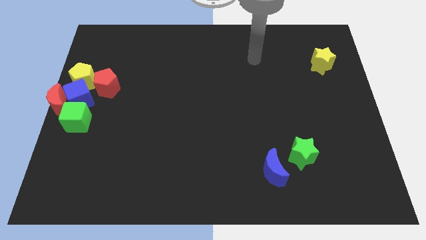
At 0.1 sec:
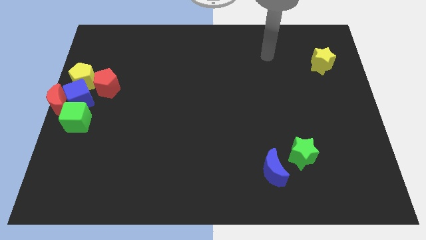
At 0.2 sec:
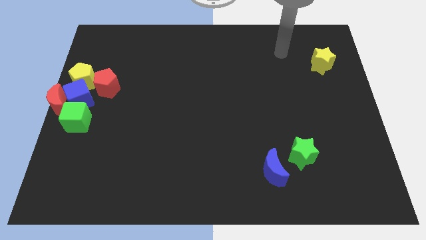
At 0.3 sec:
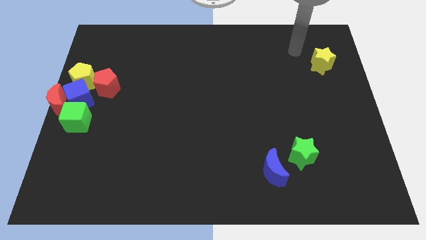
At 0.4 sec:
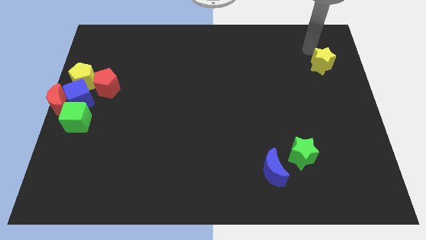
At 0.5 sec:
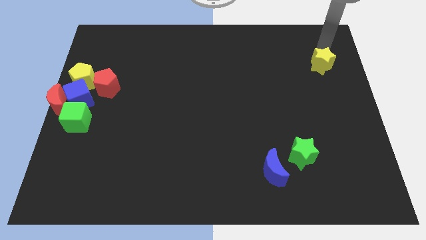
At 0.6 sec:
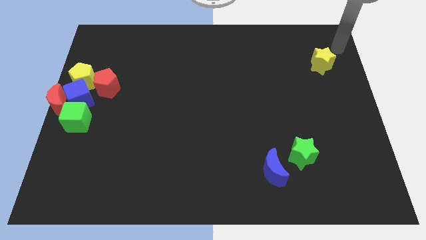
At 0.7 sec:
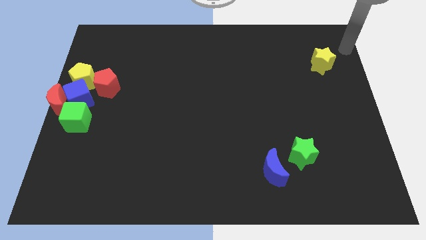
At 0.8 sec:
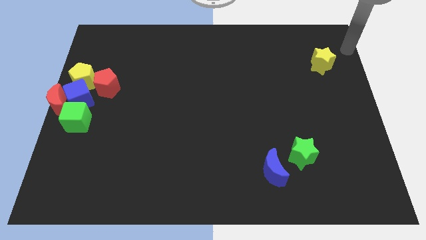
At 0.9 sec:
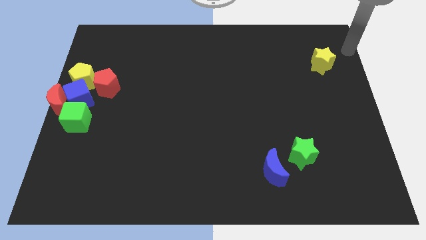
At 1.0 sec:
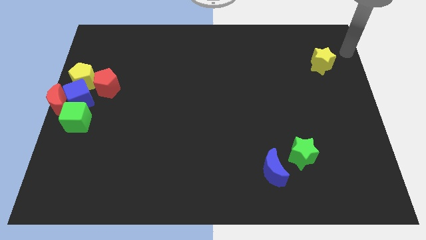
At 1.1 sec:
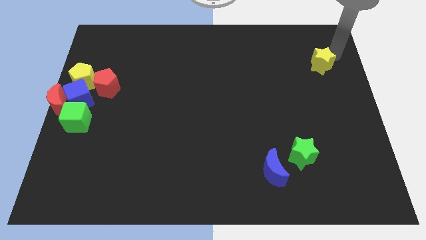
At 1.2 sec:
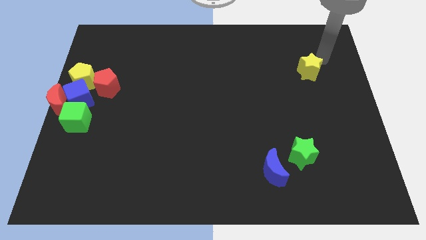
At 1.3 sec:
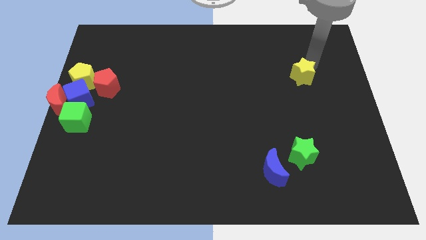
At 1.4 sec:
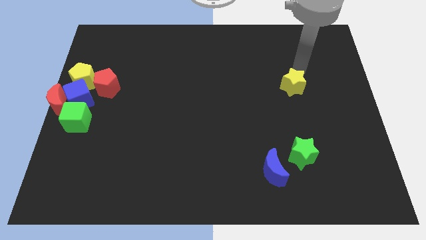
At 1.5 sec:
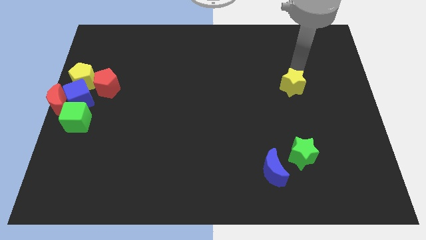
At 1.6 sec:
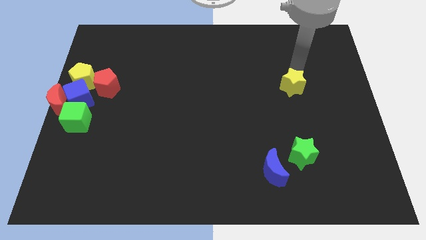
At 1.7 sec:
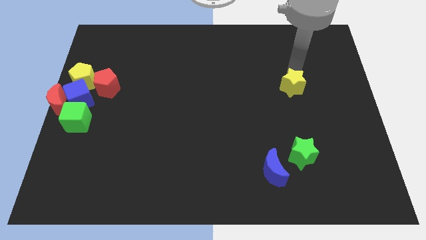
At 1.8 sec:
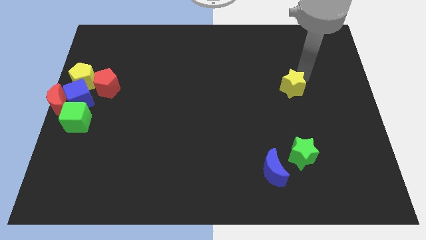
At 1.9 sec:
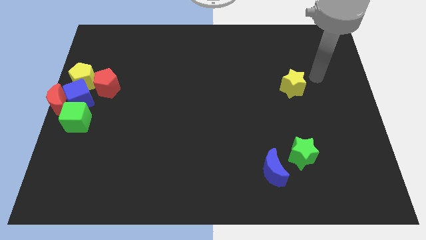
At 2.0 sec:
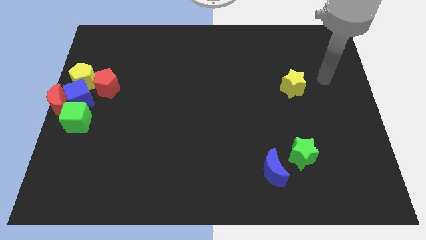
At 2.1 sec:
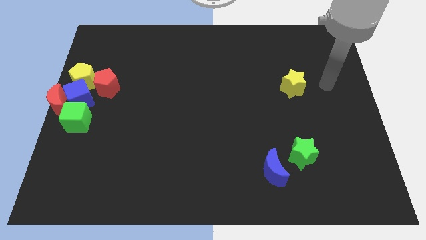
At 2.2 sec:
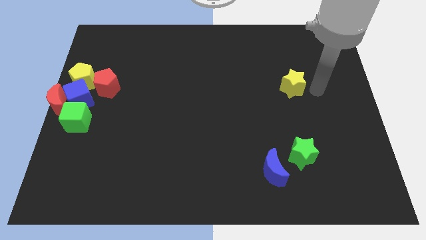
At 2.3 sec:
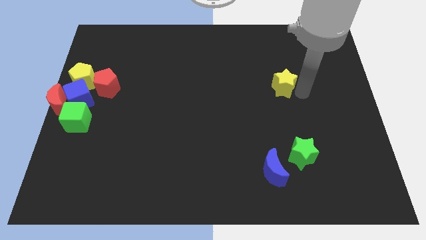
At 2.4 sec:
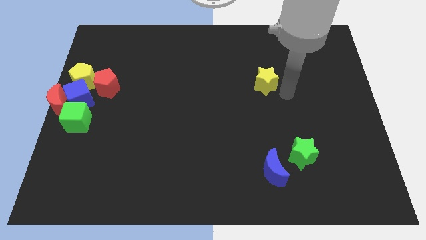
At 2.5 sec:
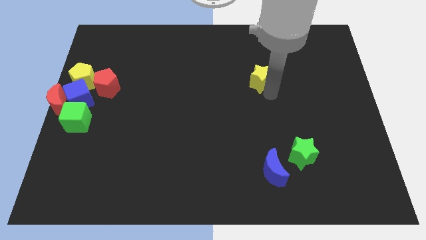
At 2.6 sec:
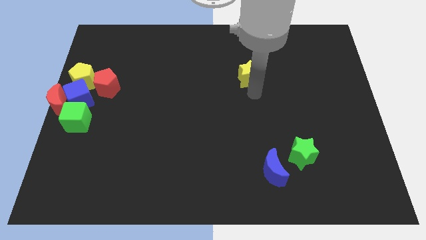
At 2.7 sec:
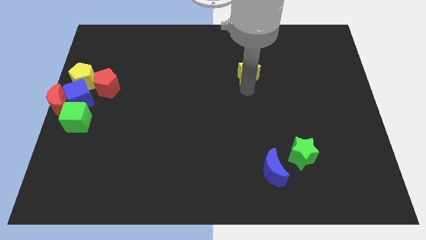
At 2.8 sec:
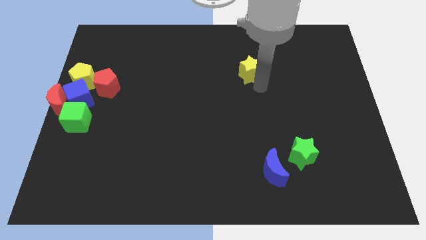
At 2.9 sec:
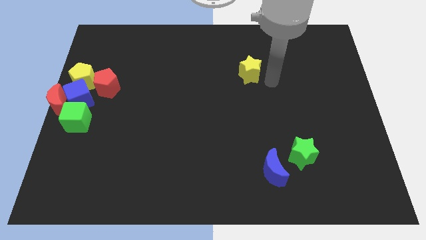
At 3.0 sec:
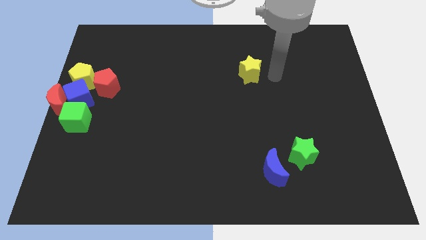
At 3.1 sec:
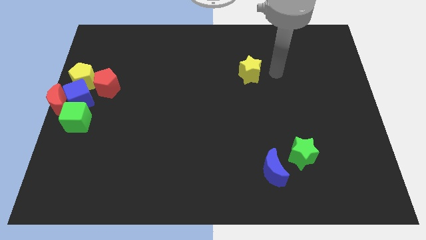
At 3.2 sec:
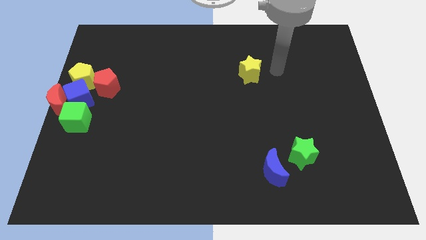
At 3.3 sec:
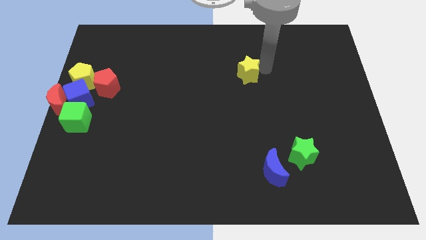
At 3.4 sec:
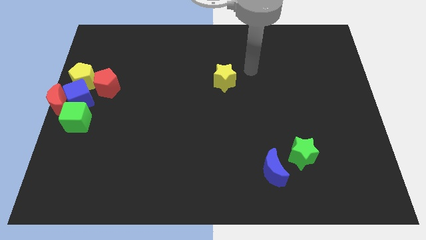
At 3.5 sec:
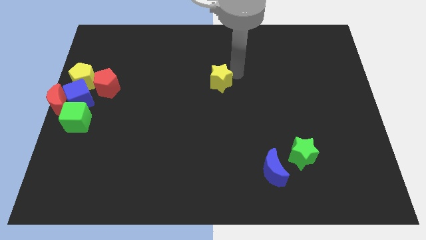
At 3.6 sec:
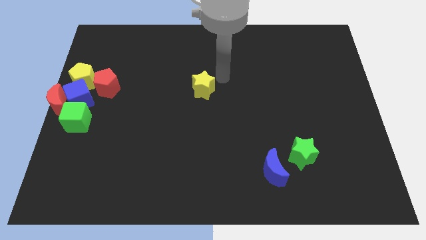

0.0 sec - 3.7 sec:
put the yellow star at the center of the board

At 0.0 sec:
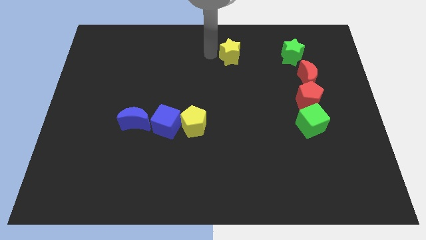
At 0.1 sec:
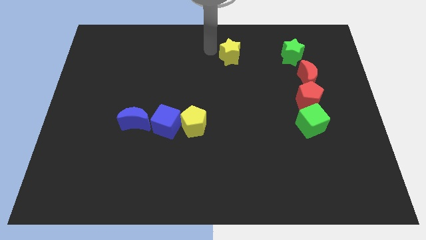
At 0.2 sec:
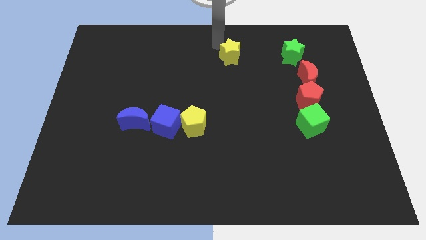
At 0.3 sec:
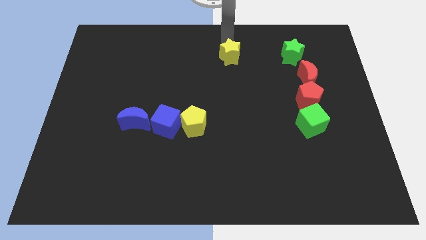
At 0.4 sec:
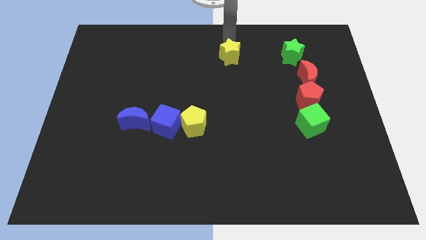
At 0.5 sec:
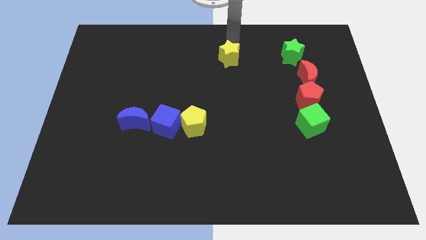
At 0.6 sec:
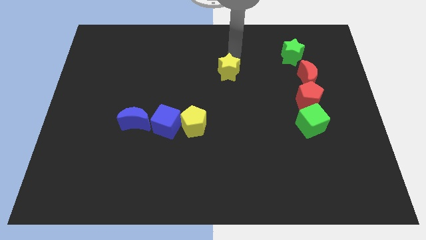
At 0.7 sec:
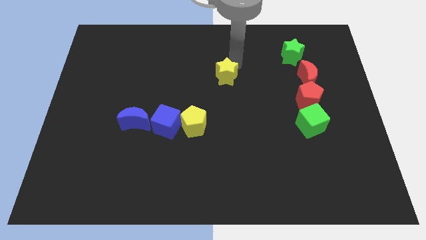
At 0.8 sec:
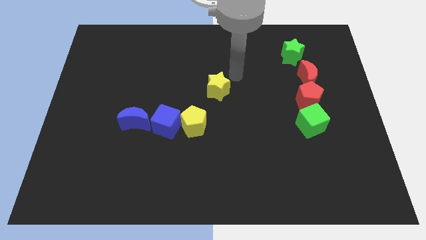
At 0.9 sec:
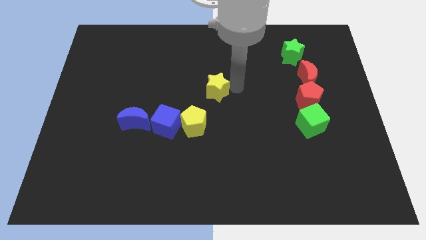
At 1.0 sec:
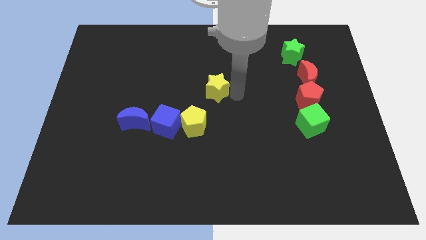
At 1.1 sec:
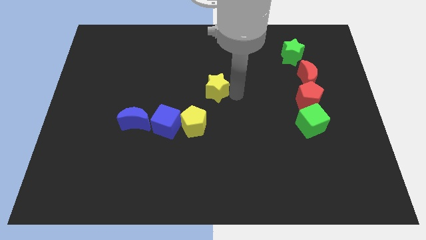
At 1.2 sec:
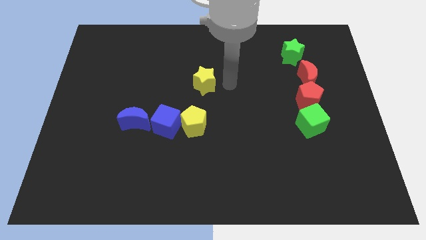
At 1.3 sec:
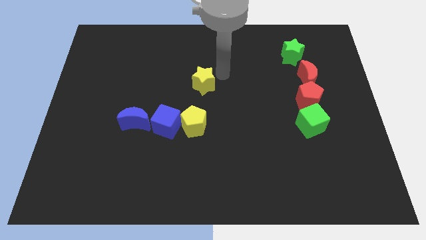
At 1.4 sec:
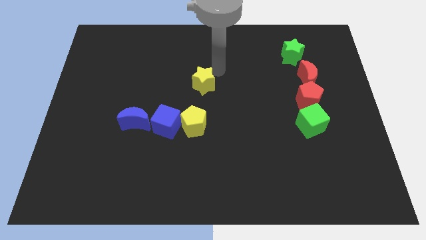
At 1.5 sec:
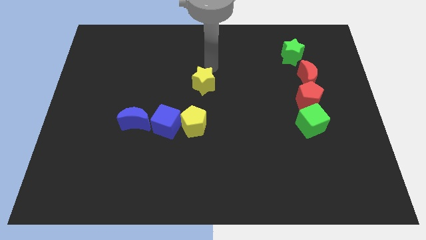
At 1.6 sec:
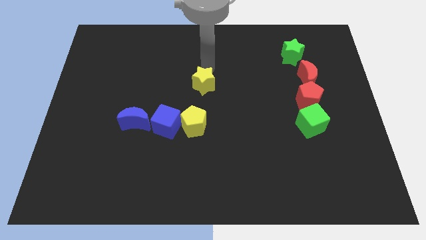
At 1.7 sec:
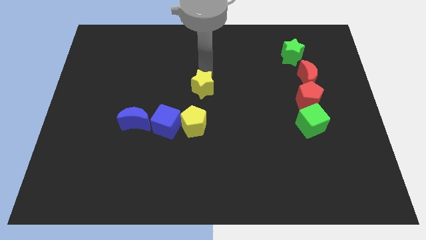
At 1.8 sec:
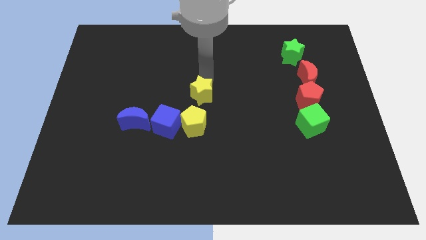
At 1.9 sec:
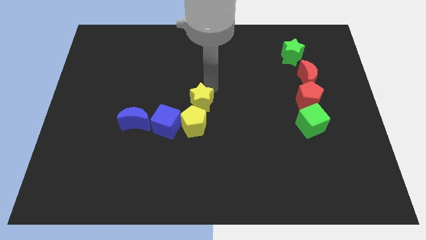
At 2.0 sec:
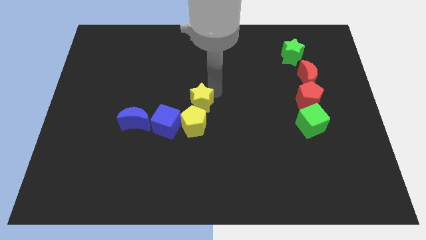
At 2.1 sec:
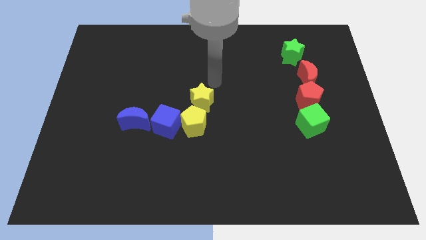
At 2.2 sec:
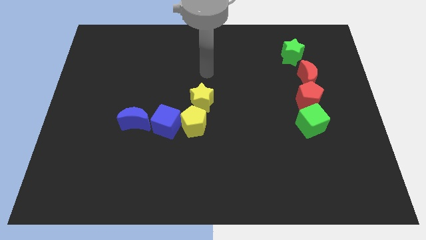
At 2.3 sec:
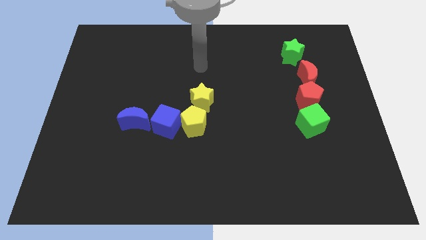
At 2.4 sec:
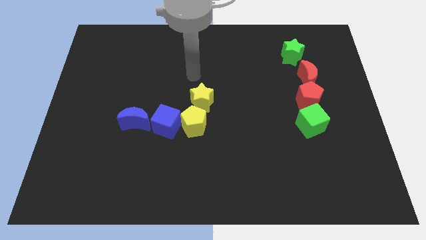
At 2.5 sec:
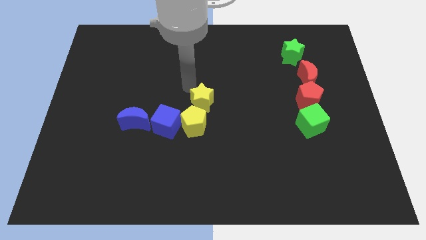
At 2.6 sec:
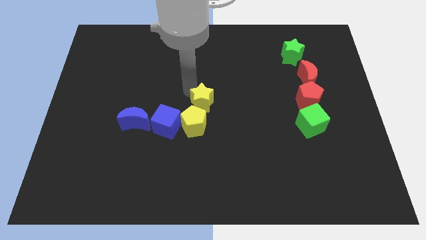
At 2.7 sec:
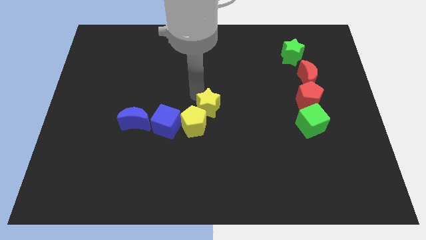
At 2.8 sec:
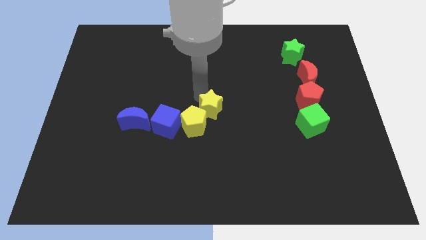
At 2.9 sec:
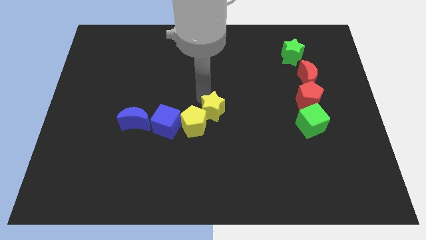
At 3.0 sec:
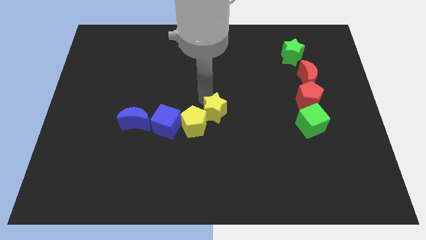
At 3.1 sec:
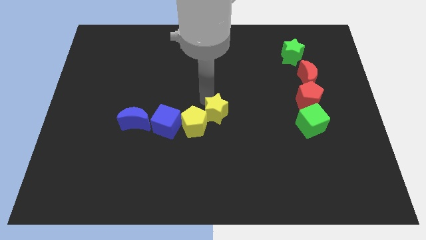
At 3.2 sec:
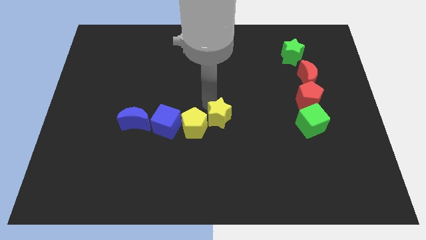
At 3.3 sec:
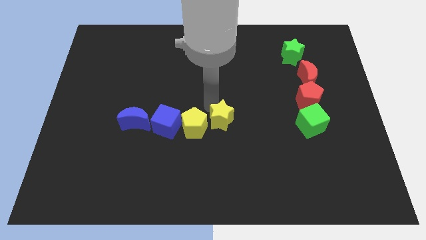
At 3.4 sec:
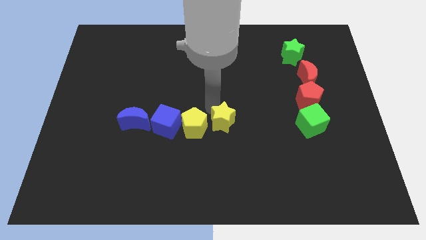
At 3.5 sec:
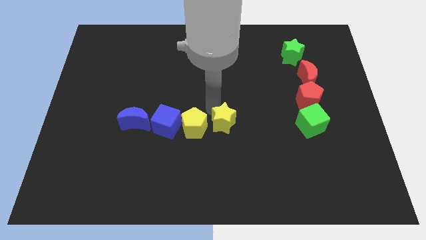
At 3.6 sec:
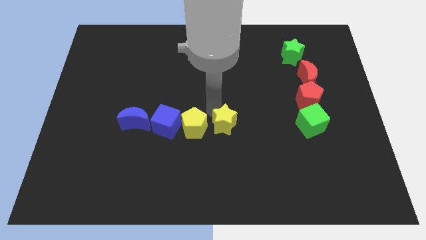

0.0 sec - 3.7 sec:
push the yellow star downward

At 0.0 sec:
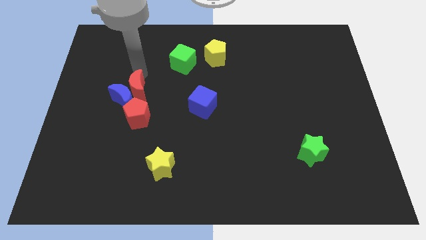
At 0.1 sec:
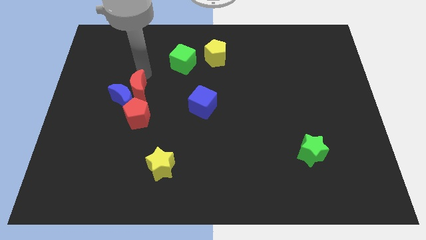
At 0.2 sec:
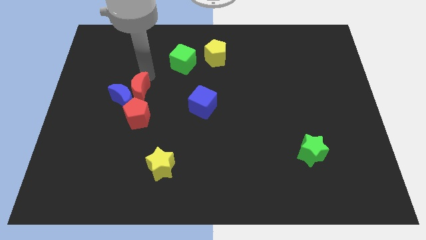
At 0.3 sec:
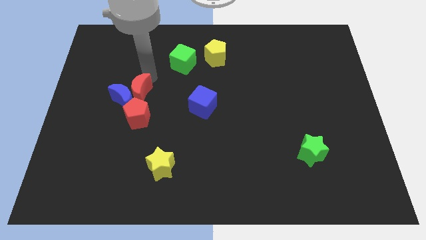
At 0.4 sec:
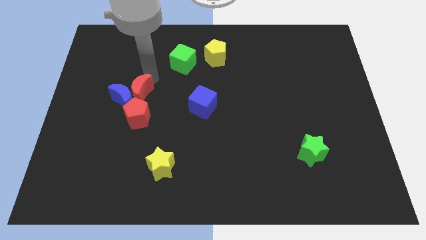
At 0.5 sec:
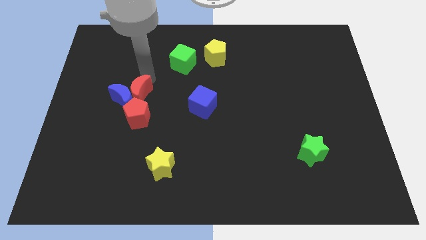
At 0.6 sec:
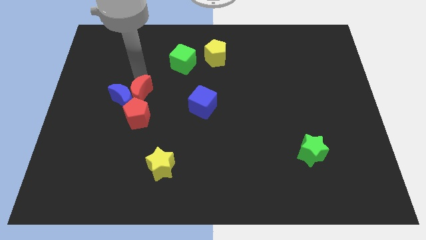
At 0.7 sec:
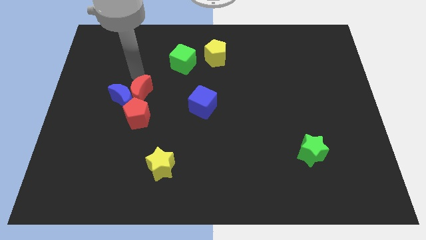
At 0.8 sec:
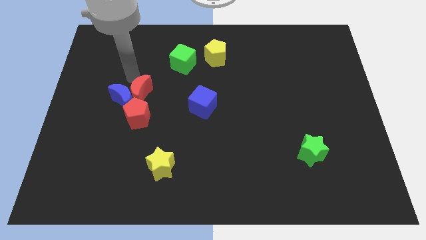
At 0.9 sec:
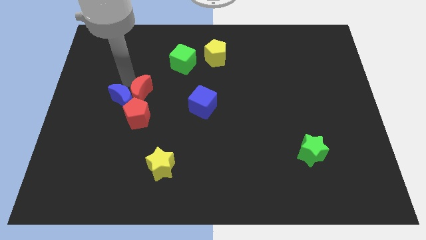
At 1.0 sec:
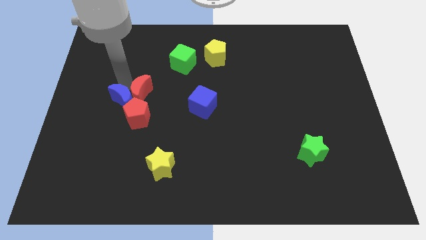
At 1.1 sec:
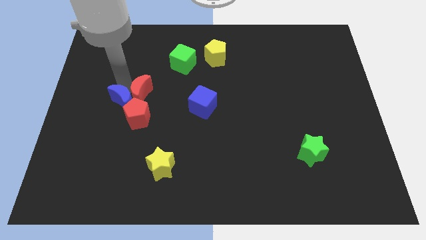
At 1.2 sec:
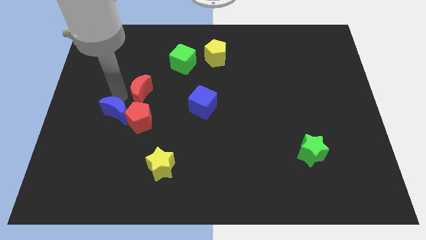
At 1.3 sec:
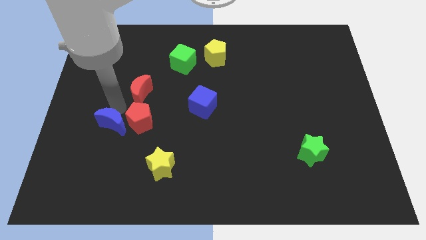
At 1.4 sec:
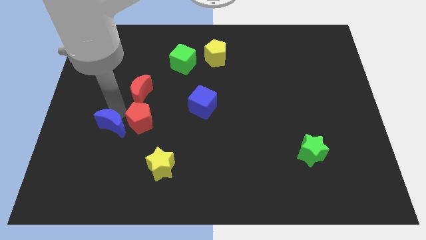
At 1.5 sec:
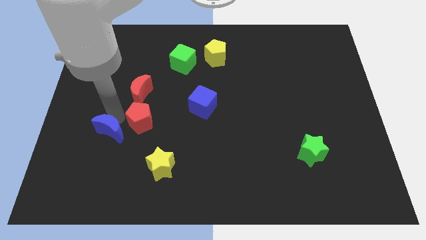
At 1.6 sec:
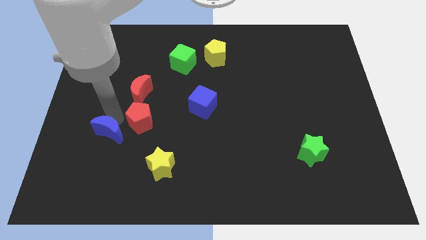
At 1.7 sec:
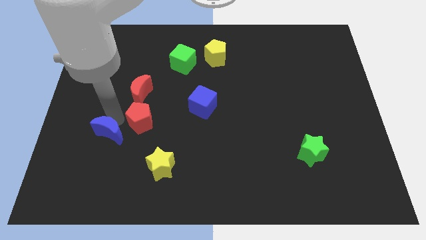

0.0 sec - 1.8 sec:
separate the blue crescent from red crescent
